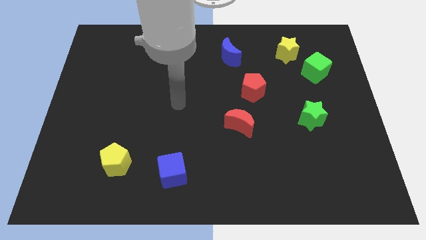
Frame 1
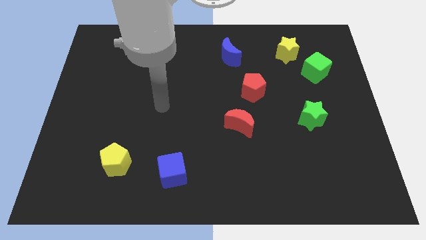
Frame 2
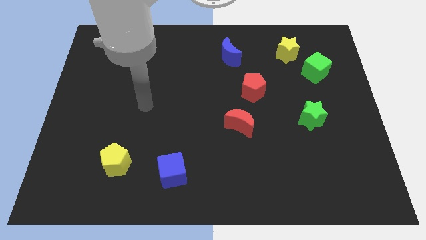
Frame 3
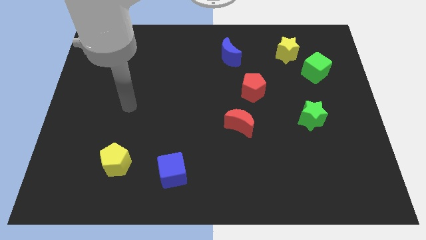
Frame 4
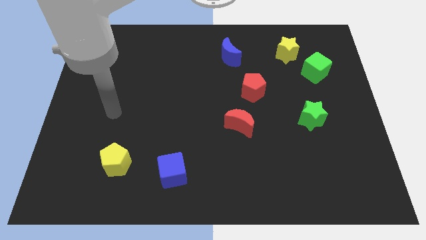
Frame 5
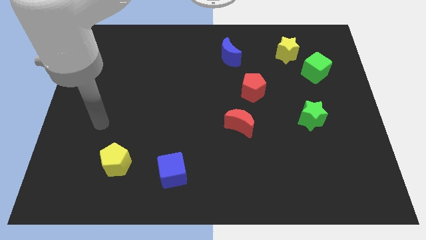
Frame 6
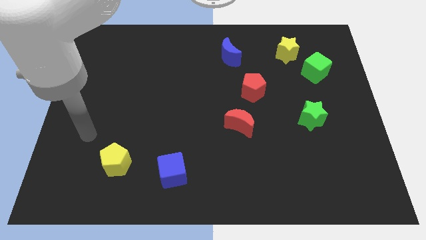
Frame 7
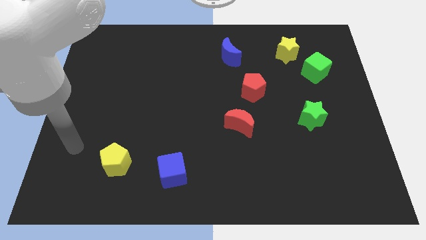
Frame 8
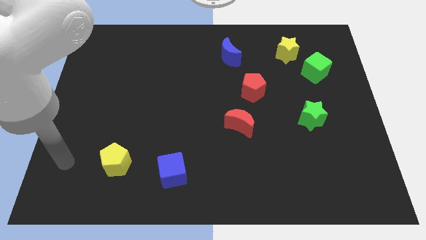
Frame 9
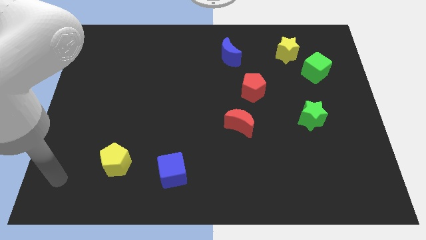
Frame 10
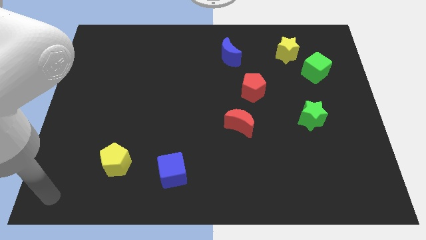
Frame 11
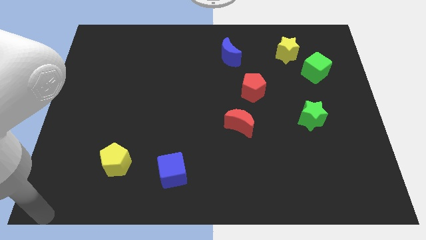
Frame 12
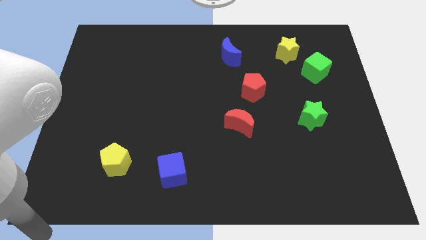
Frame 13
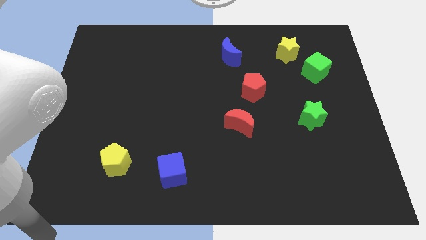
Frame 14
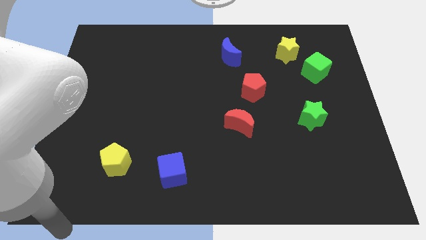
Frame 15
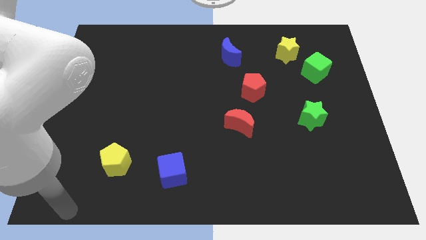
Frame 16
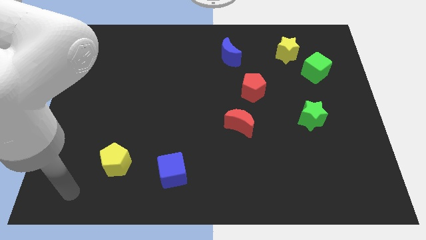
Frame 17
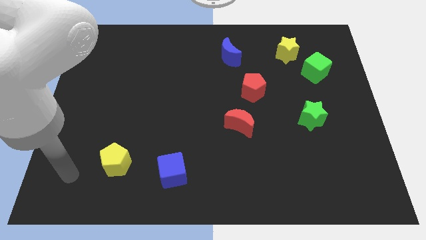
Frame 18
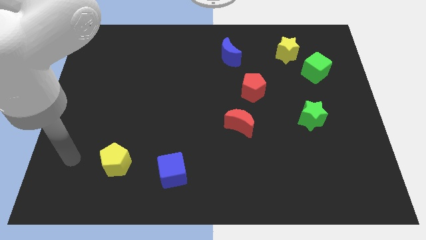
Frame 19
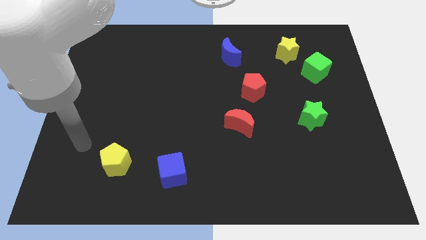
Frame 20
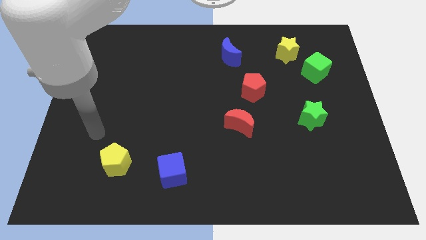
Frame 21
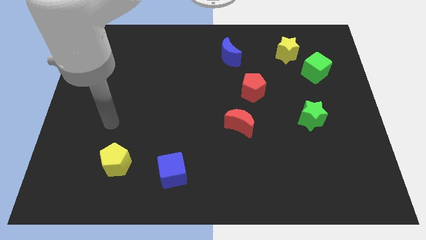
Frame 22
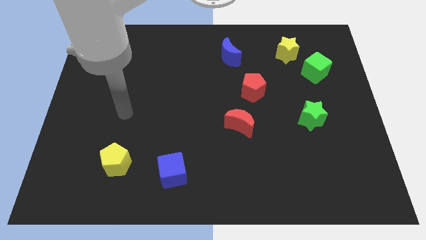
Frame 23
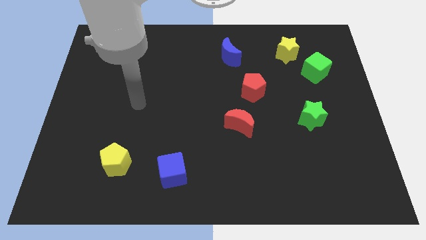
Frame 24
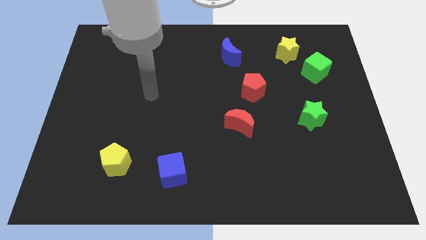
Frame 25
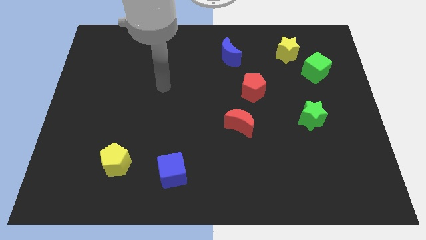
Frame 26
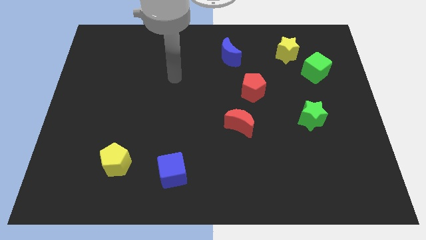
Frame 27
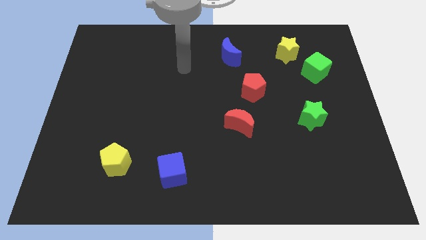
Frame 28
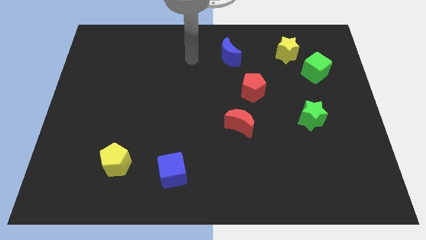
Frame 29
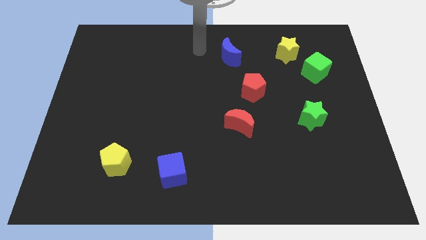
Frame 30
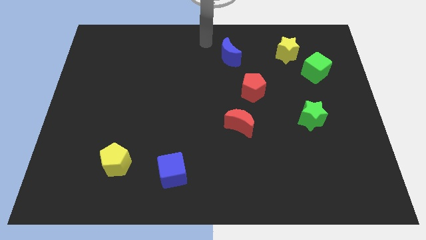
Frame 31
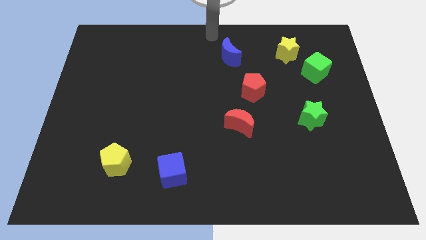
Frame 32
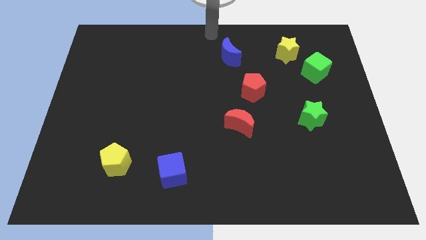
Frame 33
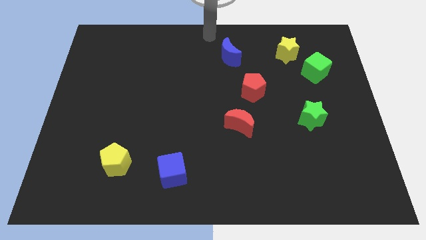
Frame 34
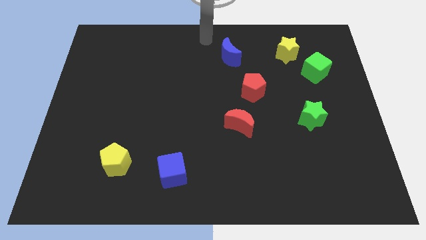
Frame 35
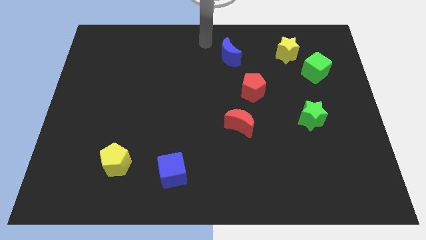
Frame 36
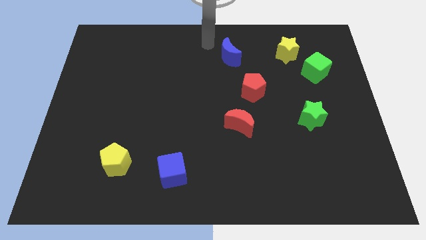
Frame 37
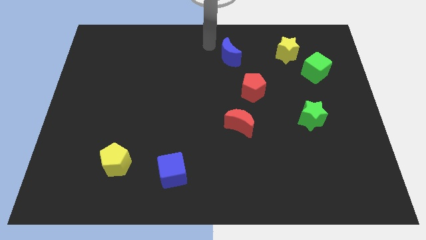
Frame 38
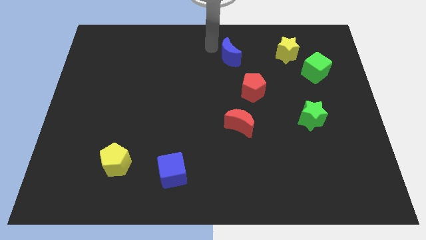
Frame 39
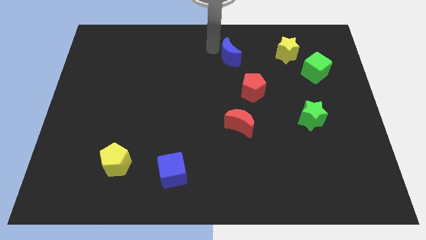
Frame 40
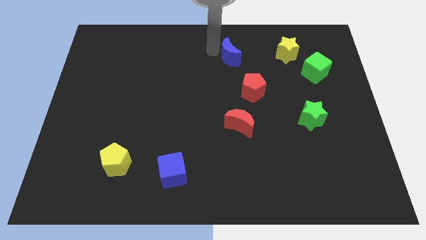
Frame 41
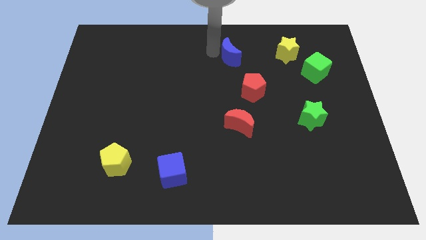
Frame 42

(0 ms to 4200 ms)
place your hand at the top center of the board

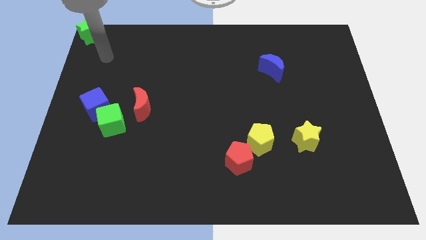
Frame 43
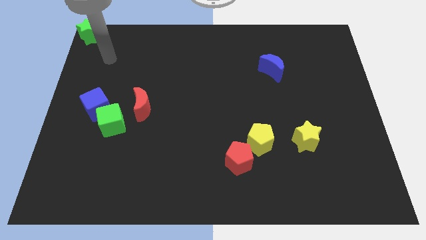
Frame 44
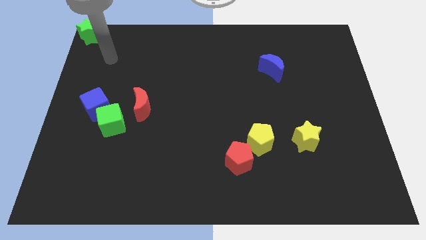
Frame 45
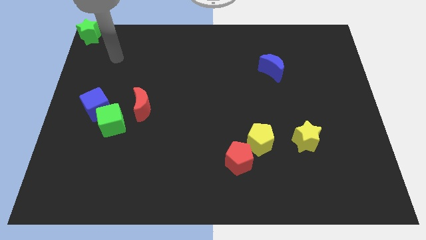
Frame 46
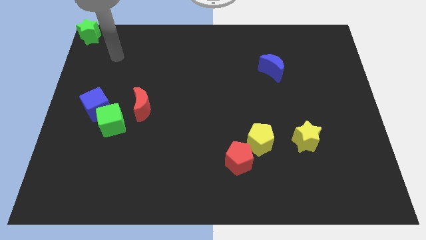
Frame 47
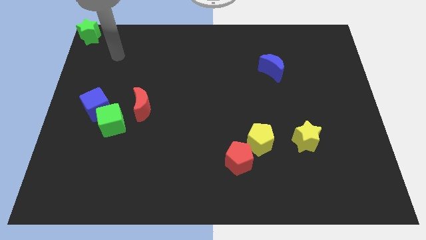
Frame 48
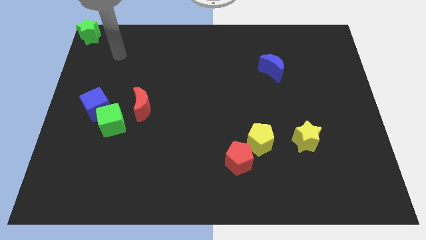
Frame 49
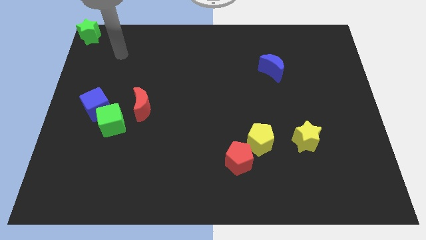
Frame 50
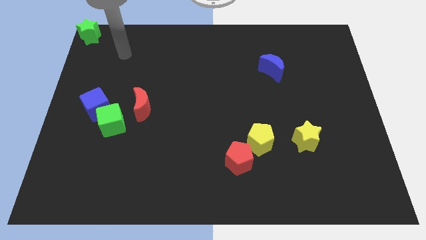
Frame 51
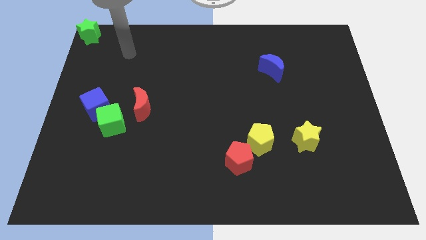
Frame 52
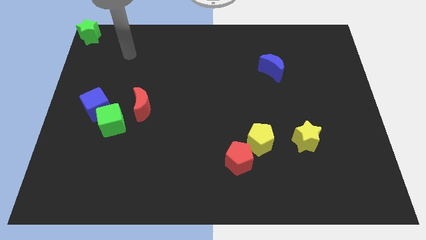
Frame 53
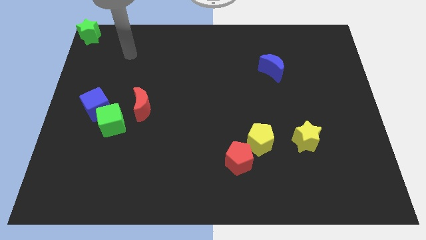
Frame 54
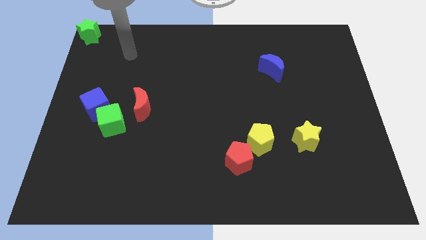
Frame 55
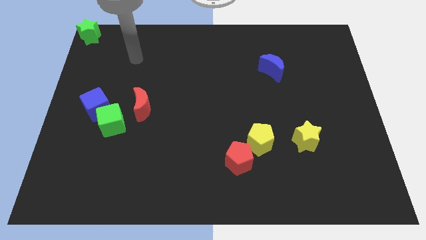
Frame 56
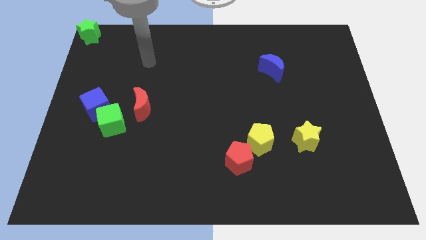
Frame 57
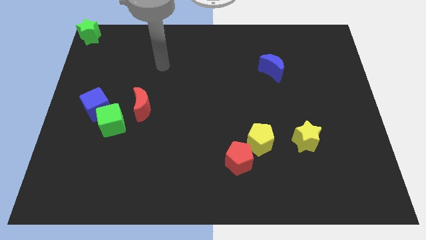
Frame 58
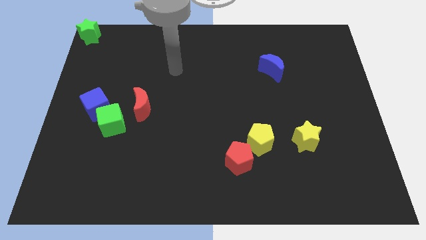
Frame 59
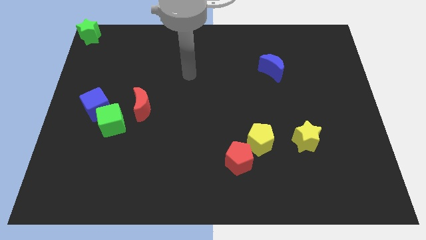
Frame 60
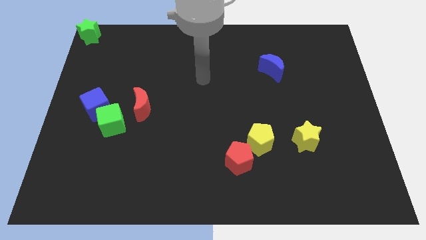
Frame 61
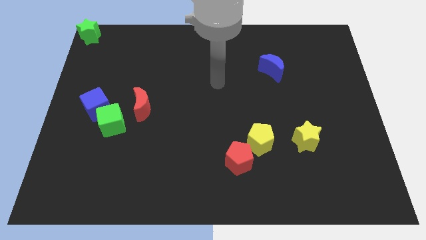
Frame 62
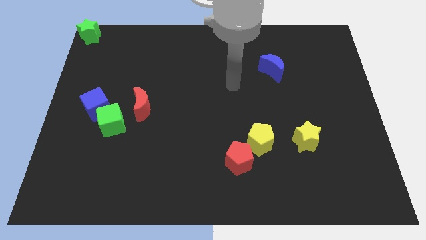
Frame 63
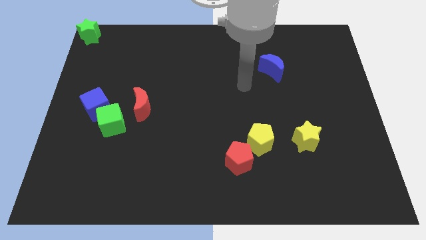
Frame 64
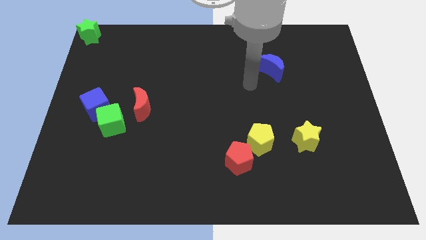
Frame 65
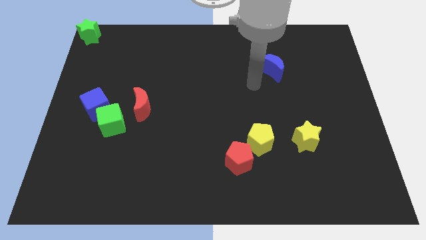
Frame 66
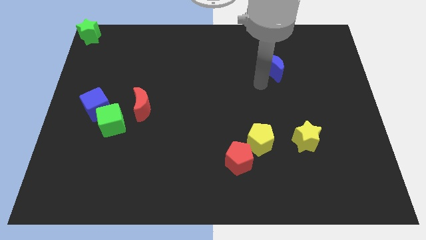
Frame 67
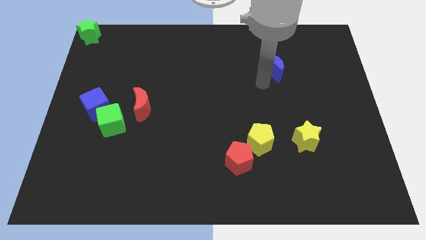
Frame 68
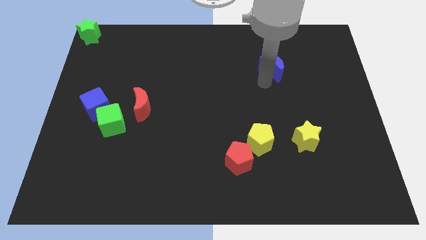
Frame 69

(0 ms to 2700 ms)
place your arm to the left side of blue crescent

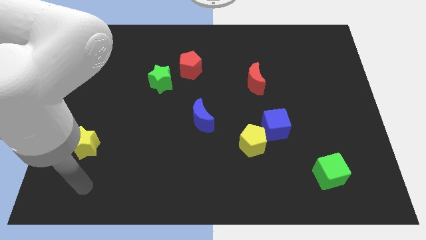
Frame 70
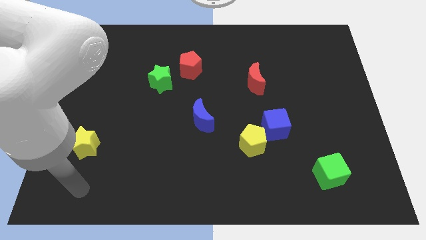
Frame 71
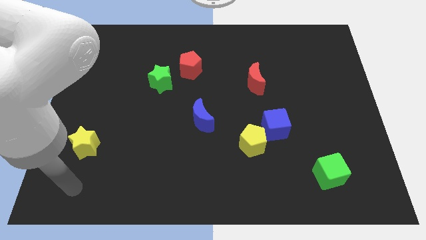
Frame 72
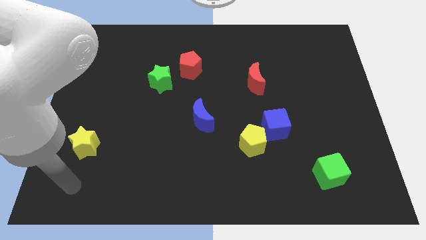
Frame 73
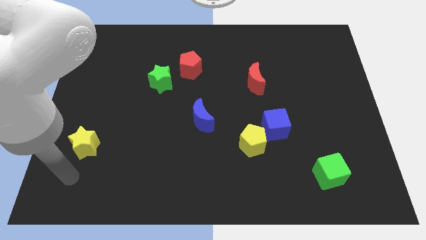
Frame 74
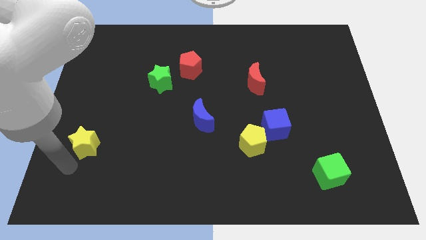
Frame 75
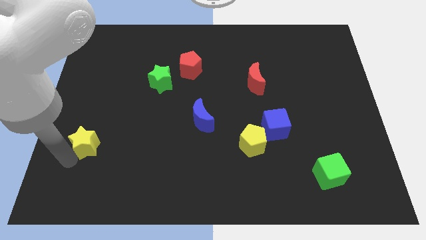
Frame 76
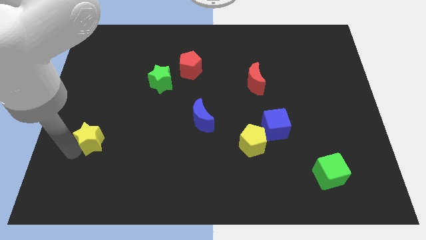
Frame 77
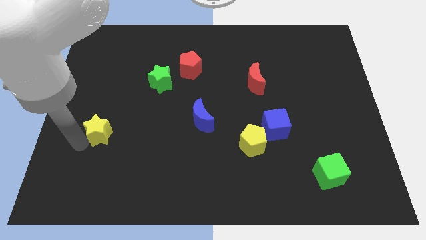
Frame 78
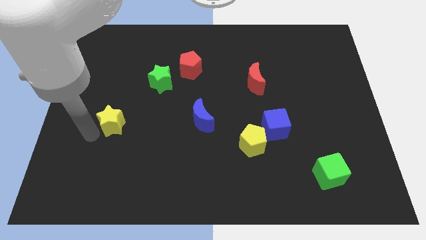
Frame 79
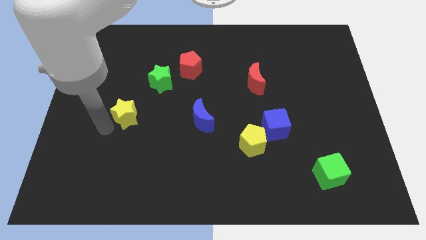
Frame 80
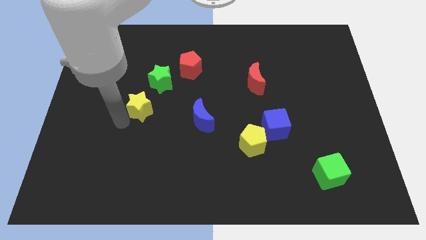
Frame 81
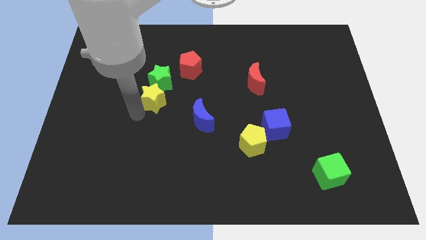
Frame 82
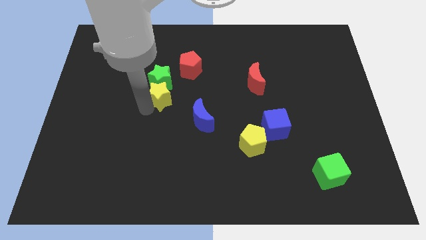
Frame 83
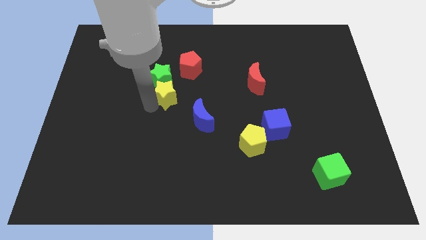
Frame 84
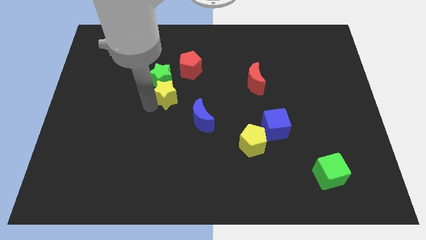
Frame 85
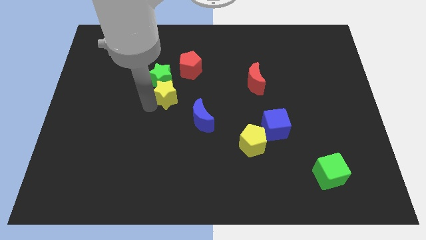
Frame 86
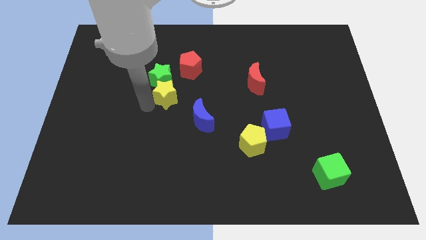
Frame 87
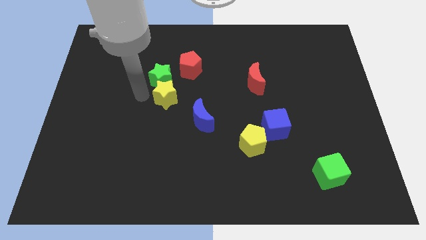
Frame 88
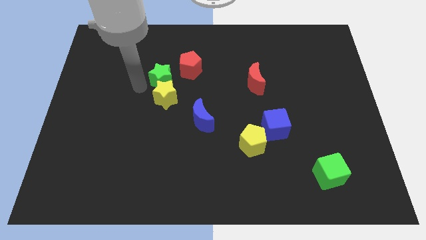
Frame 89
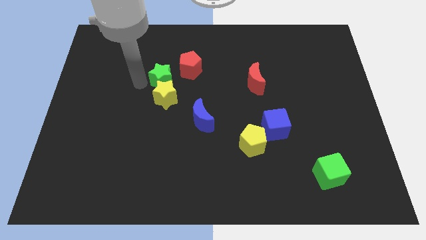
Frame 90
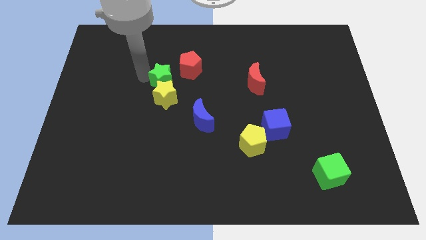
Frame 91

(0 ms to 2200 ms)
move the yellow star diagonally to the green star
